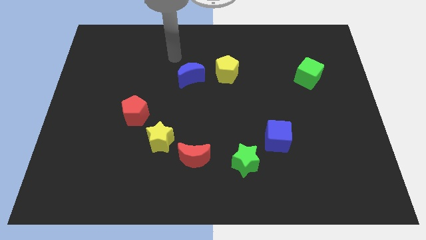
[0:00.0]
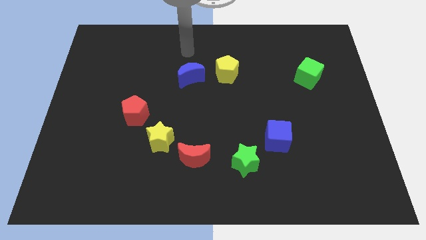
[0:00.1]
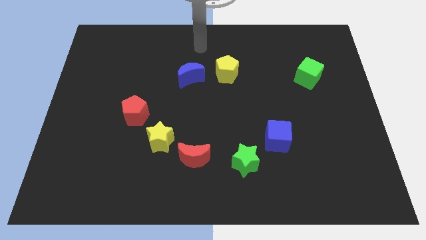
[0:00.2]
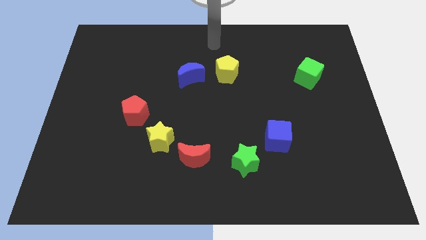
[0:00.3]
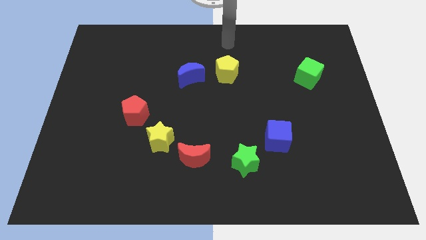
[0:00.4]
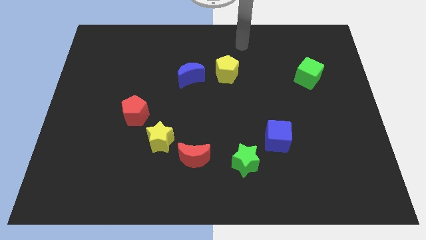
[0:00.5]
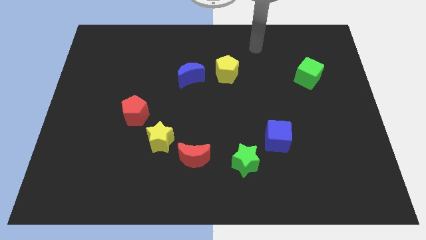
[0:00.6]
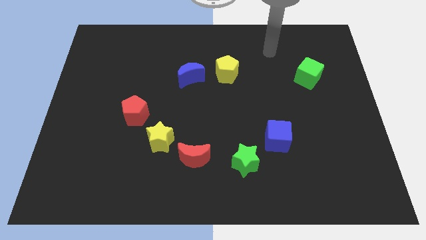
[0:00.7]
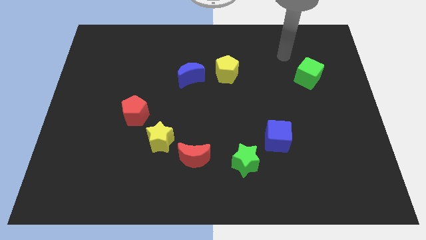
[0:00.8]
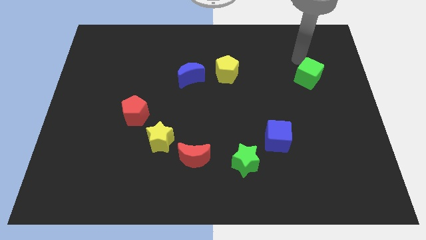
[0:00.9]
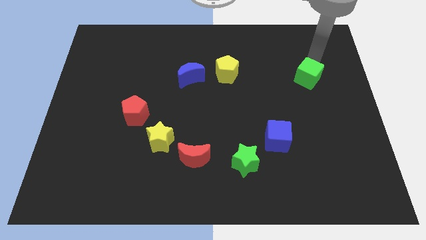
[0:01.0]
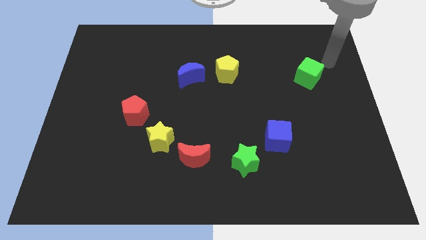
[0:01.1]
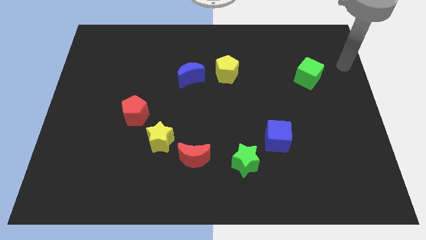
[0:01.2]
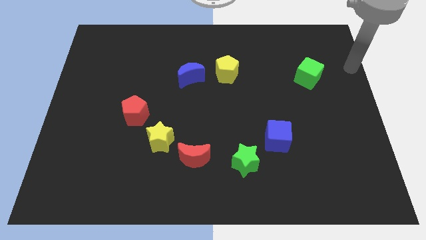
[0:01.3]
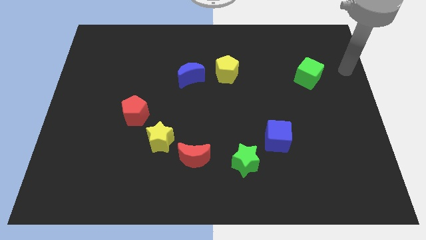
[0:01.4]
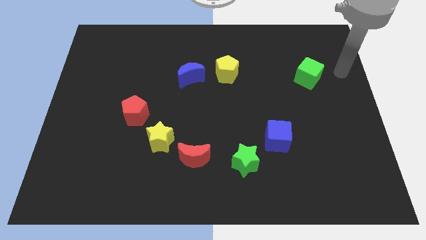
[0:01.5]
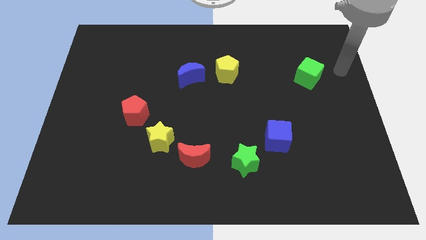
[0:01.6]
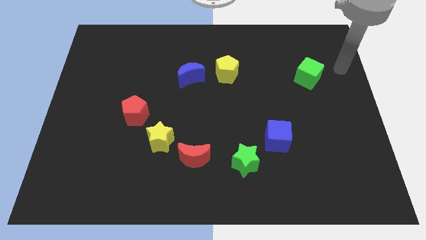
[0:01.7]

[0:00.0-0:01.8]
point your arm at the right side of the green cube

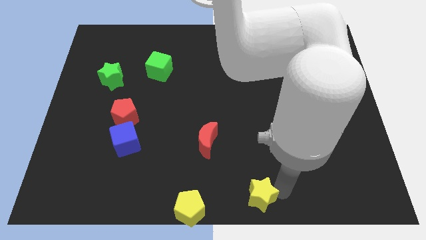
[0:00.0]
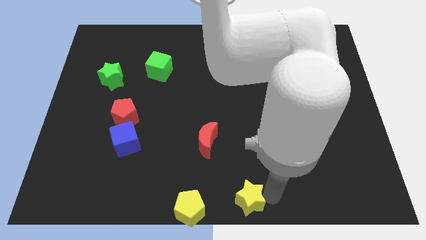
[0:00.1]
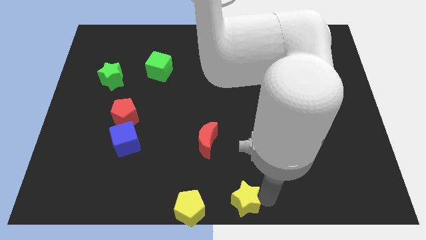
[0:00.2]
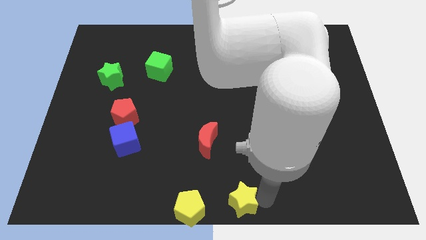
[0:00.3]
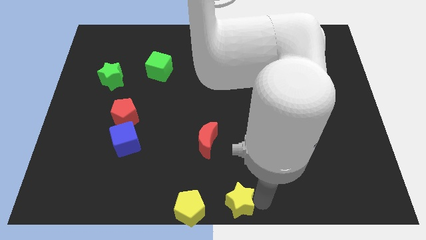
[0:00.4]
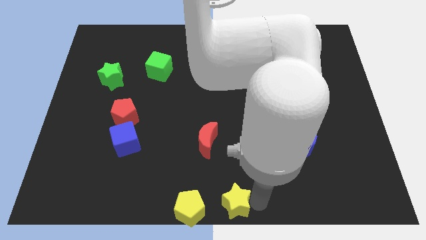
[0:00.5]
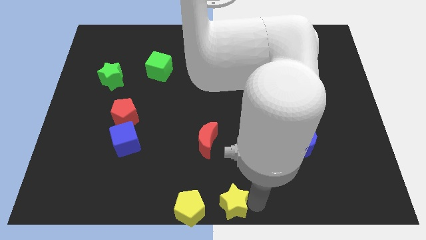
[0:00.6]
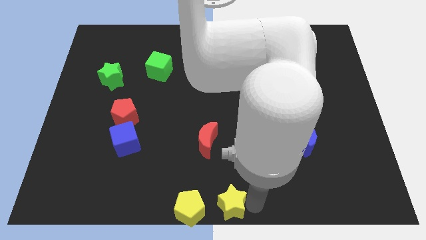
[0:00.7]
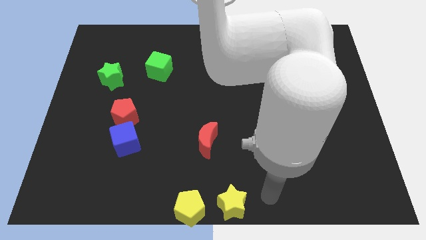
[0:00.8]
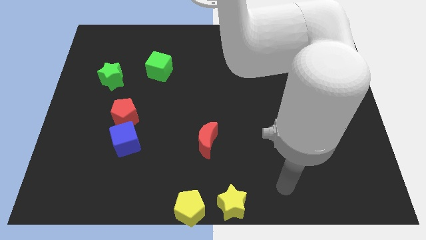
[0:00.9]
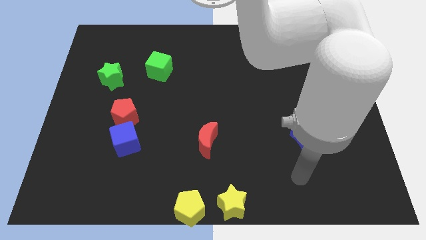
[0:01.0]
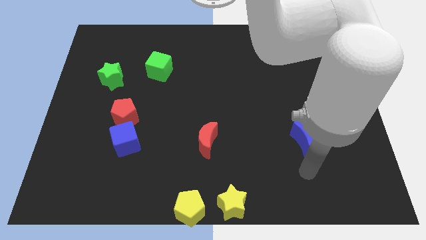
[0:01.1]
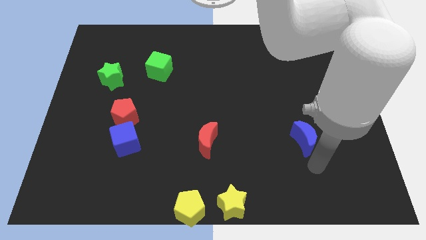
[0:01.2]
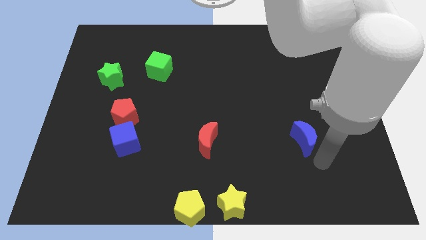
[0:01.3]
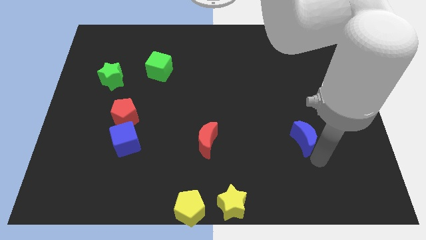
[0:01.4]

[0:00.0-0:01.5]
push yellow star near to yellow pentagon

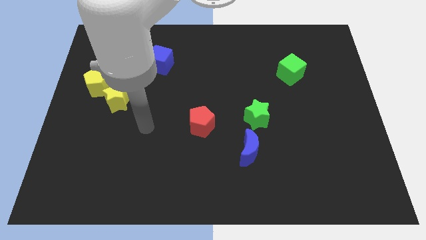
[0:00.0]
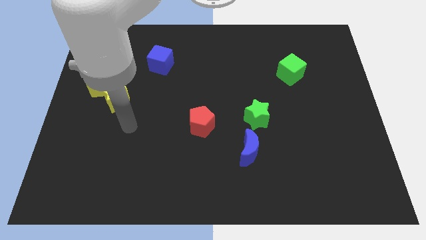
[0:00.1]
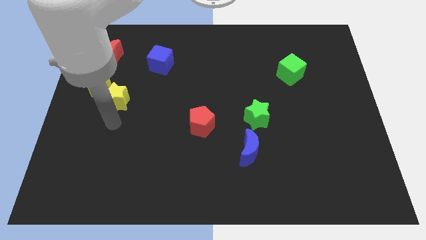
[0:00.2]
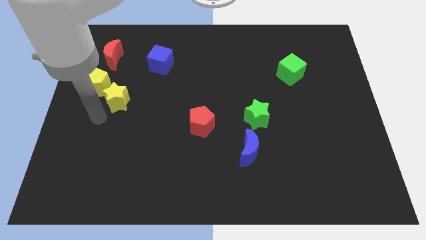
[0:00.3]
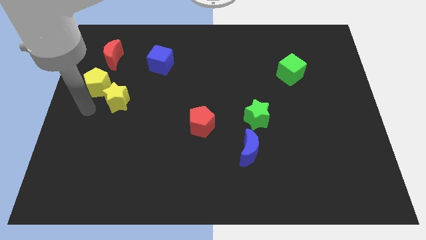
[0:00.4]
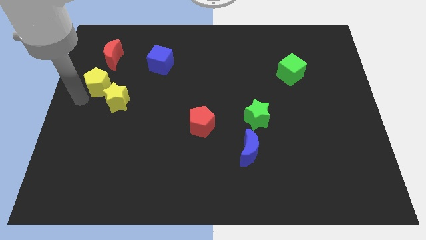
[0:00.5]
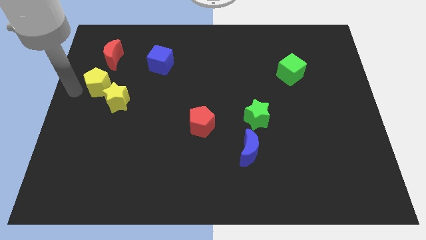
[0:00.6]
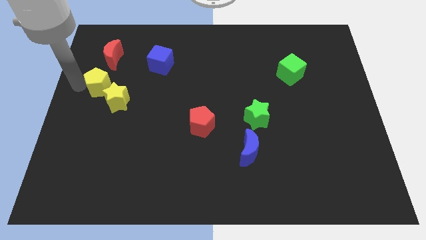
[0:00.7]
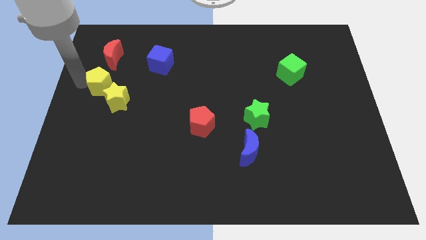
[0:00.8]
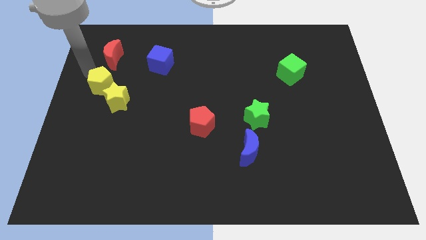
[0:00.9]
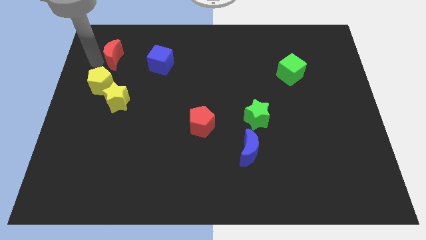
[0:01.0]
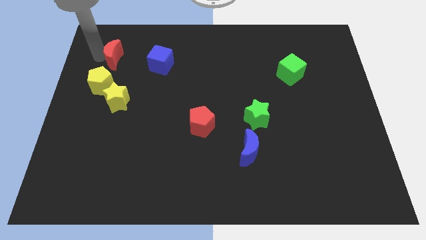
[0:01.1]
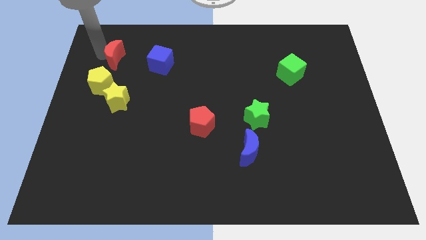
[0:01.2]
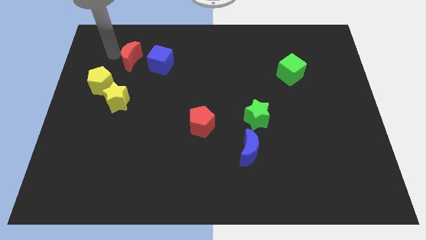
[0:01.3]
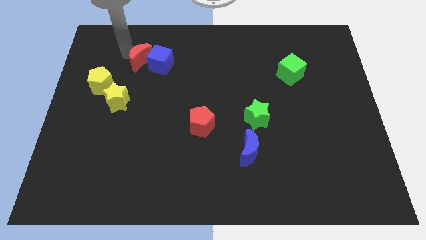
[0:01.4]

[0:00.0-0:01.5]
move the red crescent to the blue cube

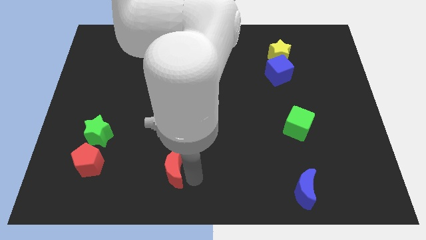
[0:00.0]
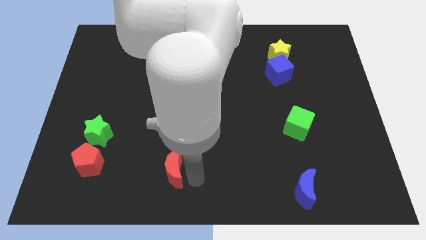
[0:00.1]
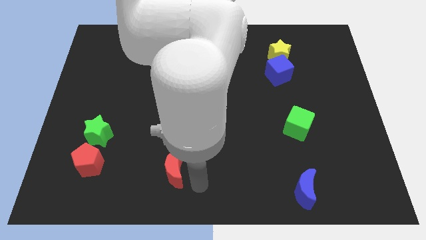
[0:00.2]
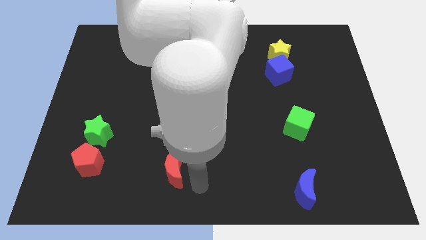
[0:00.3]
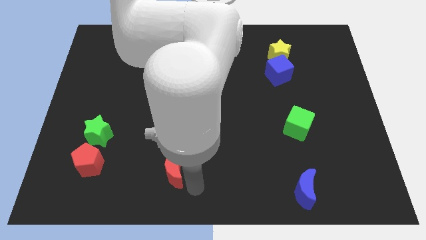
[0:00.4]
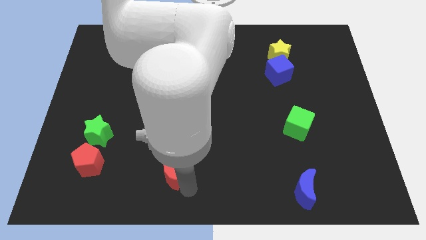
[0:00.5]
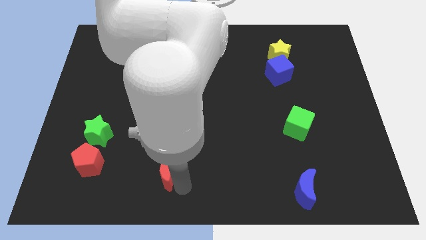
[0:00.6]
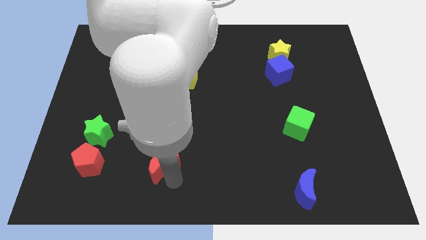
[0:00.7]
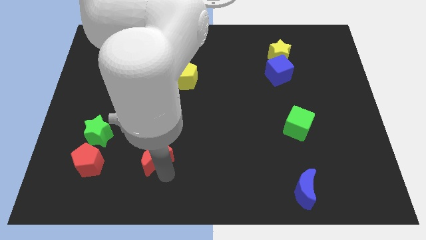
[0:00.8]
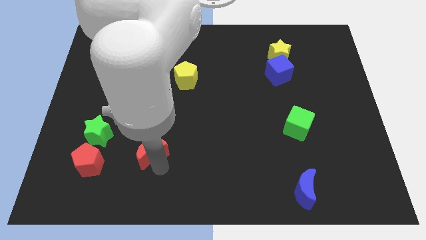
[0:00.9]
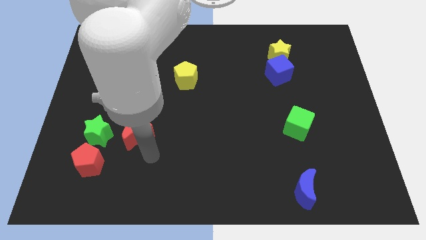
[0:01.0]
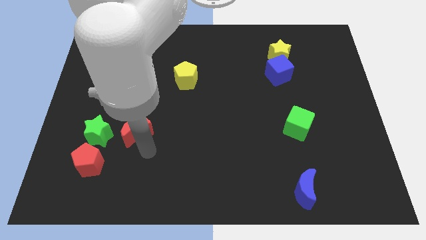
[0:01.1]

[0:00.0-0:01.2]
push the red crescent right to the green star

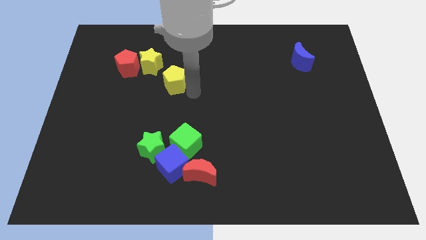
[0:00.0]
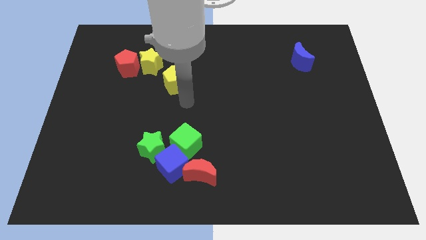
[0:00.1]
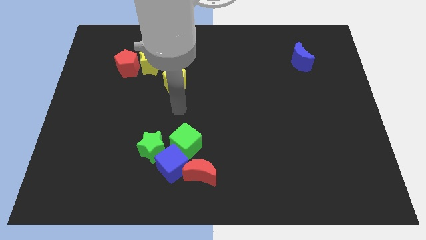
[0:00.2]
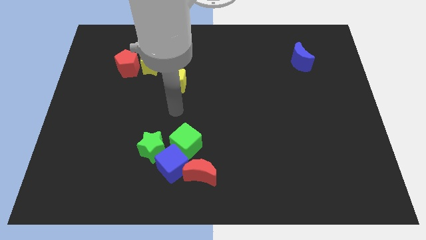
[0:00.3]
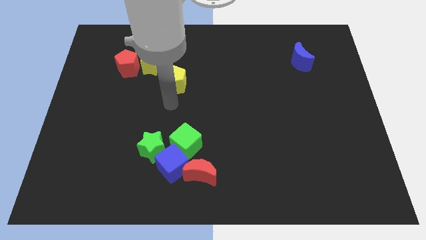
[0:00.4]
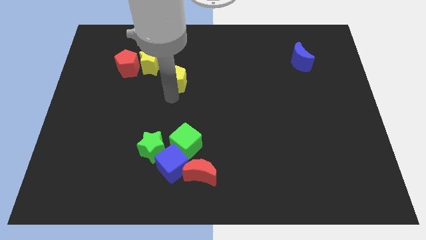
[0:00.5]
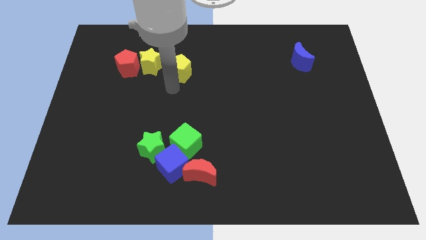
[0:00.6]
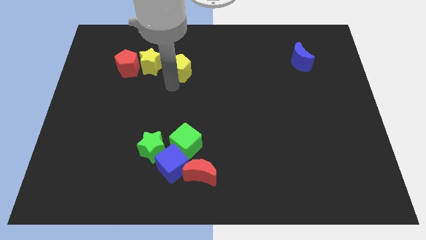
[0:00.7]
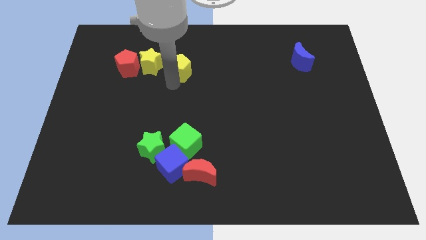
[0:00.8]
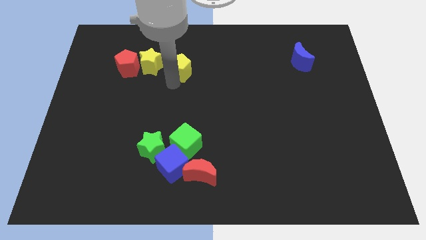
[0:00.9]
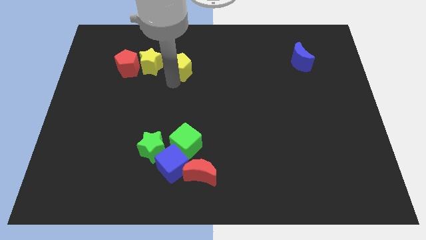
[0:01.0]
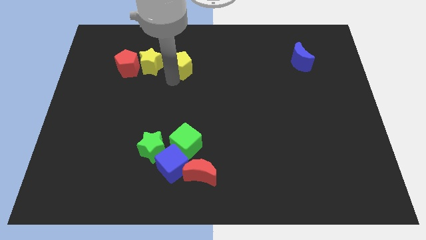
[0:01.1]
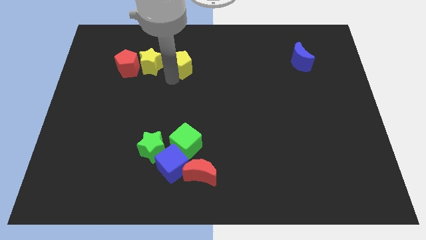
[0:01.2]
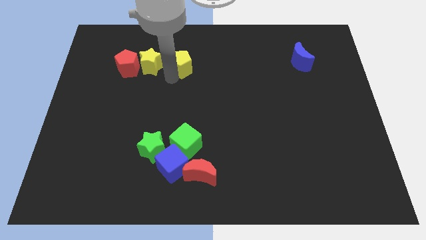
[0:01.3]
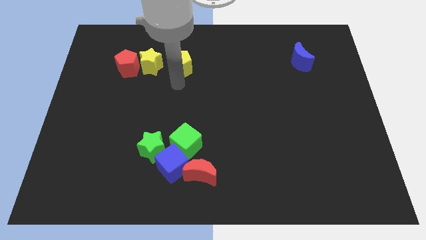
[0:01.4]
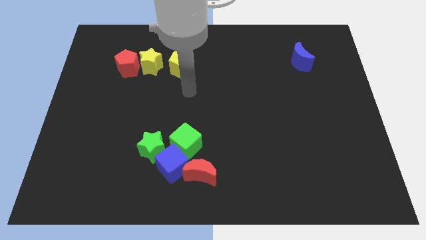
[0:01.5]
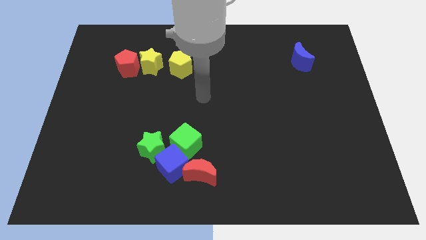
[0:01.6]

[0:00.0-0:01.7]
move the yellow pentagon to the right of the yellow star

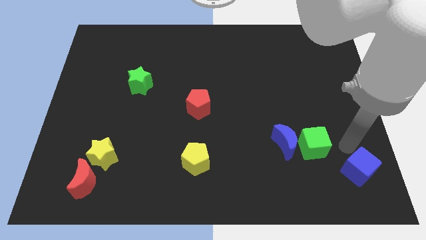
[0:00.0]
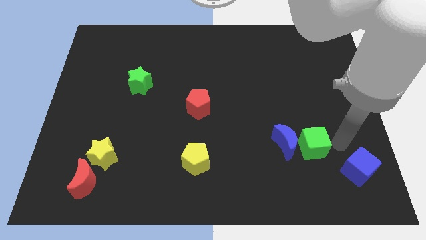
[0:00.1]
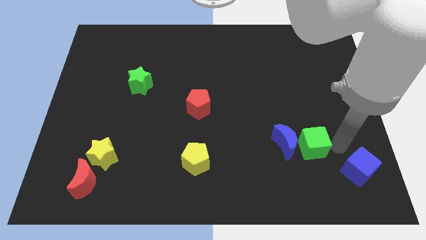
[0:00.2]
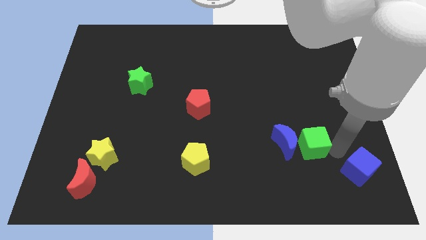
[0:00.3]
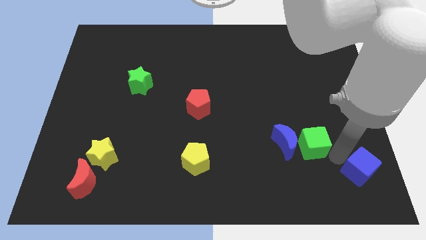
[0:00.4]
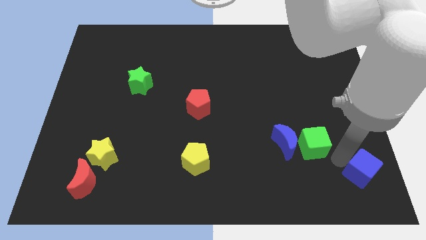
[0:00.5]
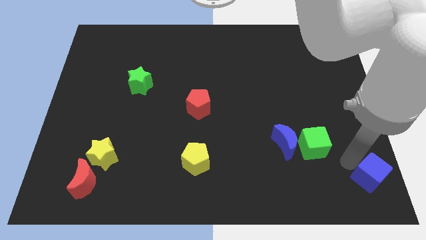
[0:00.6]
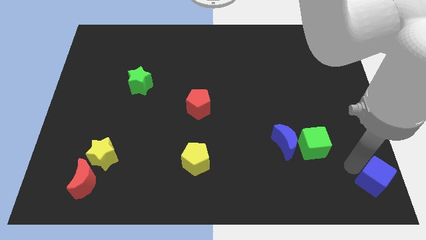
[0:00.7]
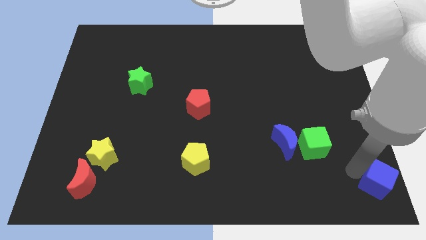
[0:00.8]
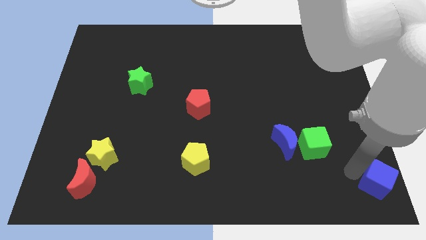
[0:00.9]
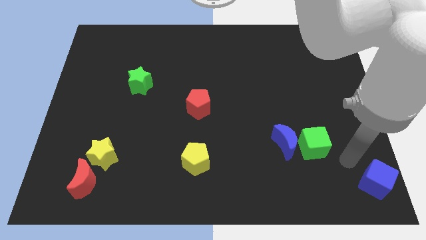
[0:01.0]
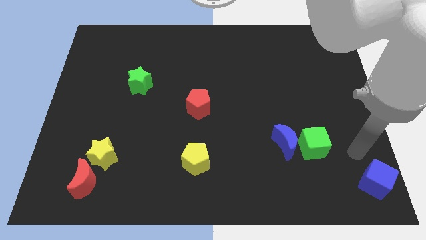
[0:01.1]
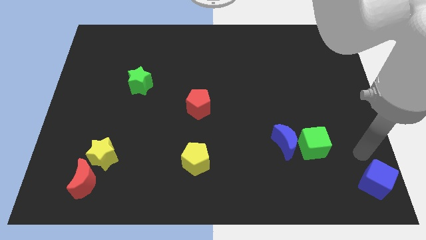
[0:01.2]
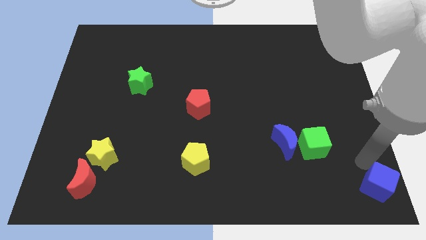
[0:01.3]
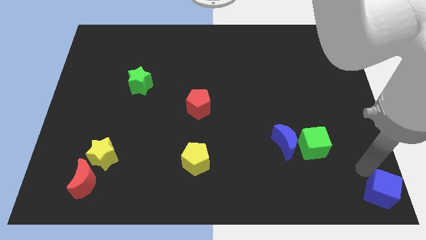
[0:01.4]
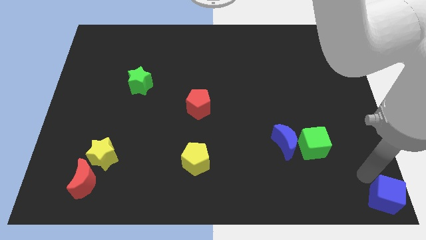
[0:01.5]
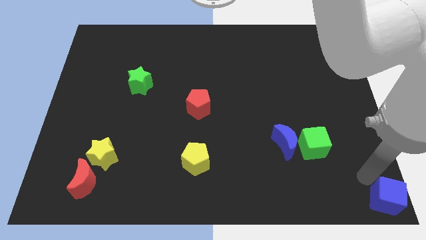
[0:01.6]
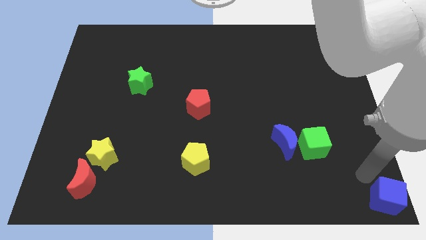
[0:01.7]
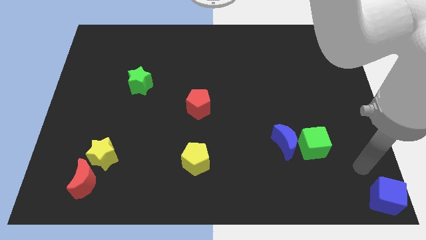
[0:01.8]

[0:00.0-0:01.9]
place the blue cube to the bottom right of the board
